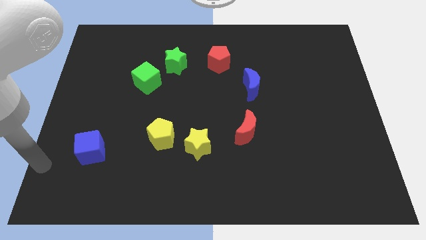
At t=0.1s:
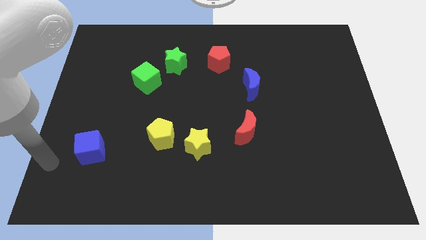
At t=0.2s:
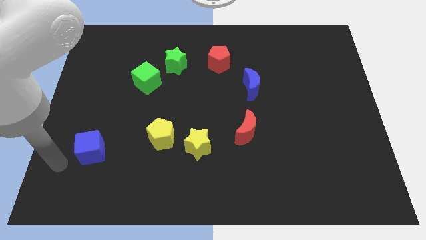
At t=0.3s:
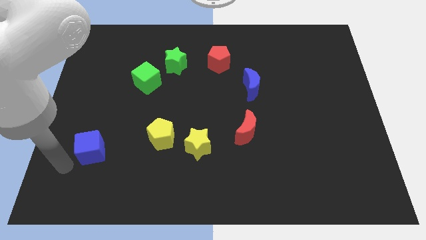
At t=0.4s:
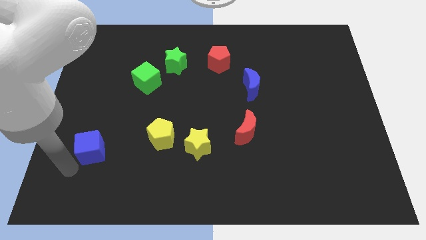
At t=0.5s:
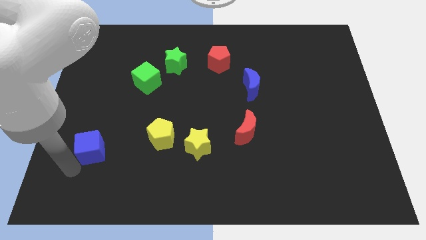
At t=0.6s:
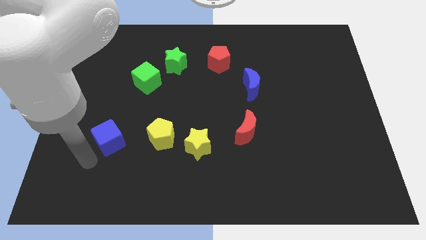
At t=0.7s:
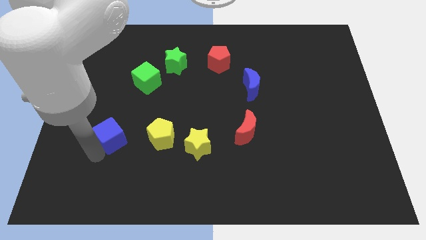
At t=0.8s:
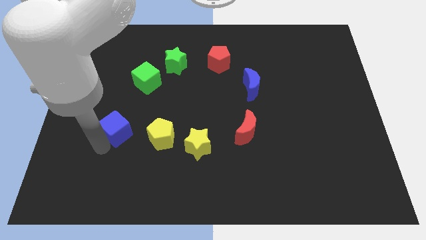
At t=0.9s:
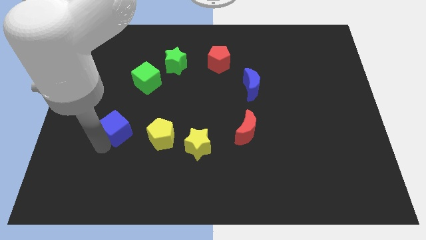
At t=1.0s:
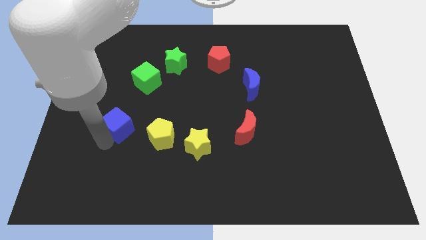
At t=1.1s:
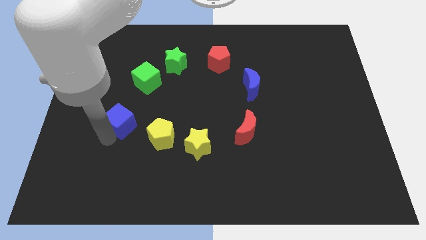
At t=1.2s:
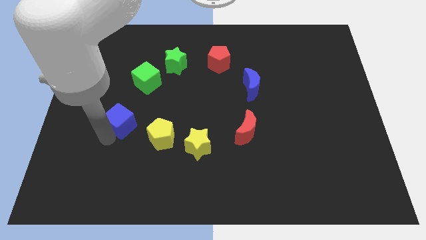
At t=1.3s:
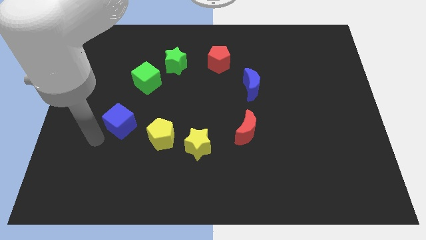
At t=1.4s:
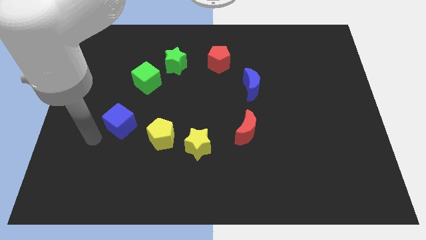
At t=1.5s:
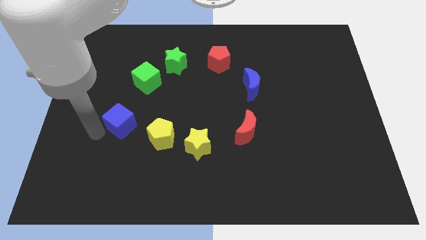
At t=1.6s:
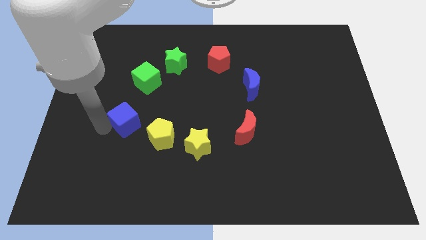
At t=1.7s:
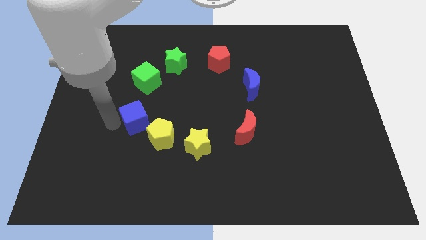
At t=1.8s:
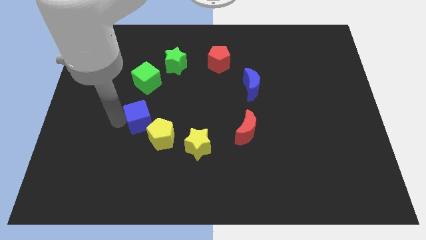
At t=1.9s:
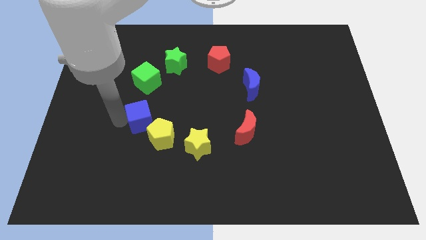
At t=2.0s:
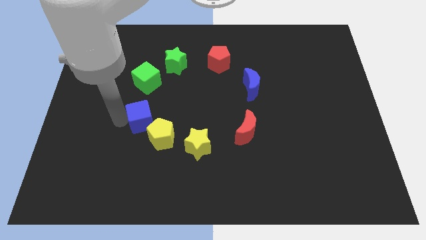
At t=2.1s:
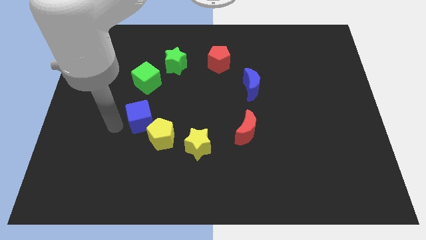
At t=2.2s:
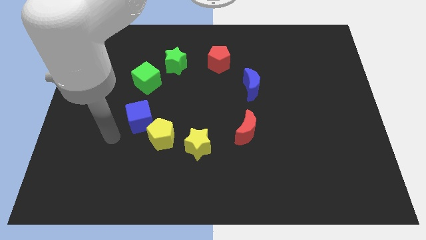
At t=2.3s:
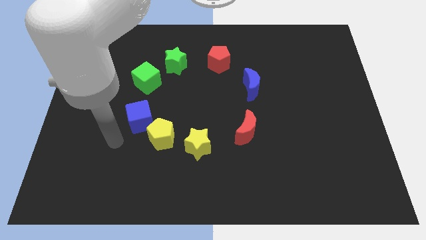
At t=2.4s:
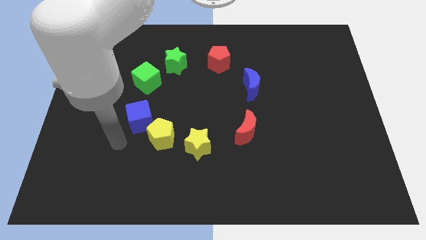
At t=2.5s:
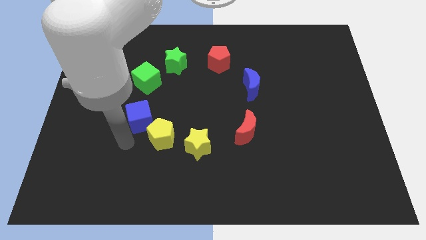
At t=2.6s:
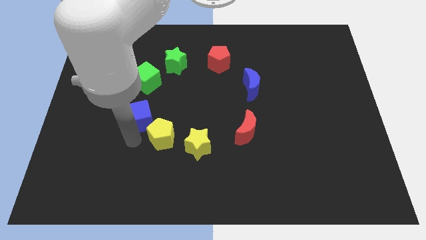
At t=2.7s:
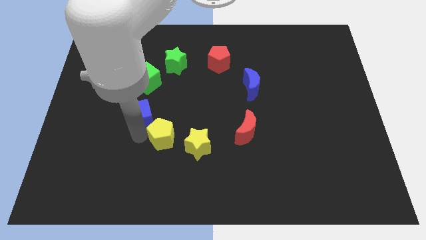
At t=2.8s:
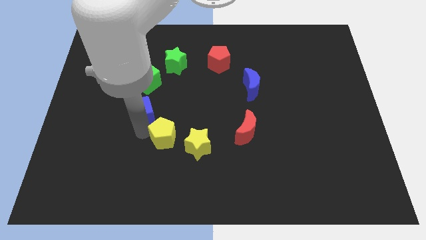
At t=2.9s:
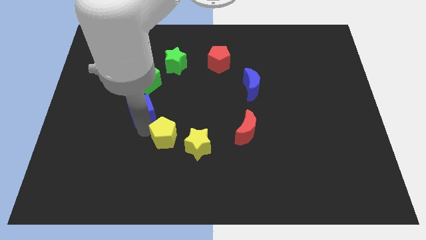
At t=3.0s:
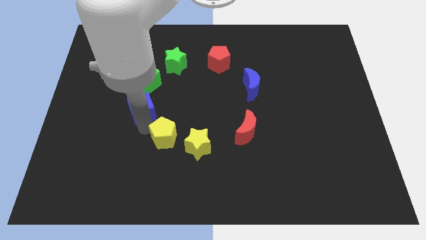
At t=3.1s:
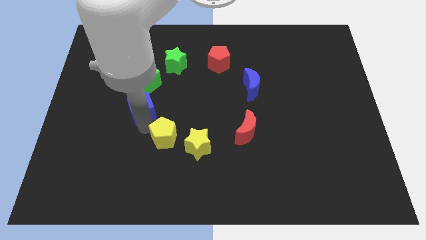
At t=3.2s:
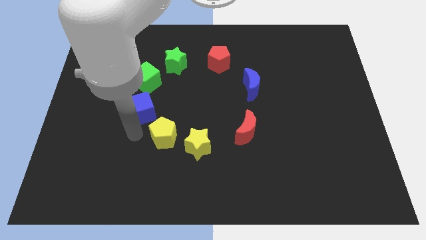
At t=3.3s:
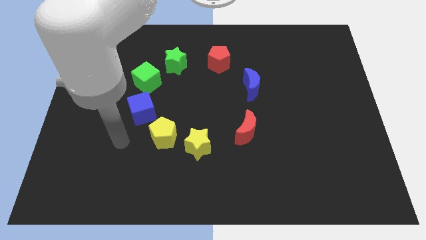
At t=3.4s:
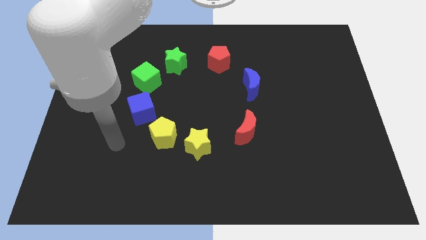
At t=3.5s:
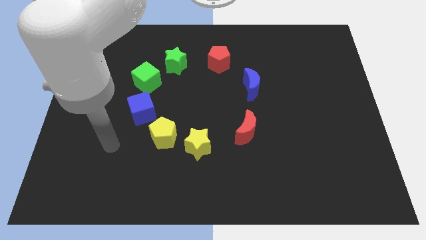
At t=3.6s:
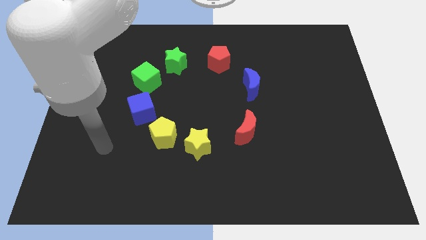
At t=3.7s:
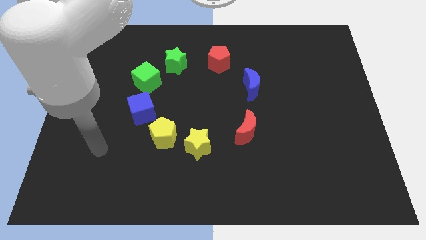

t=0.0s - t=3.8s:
move blue cube diagonally above yellow pentagon

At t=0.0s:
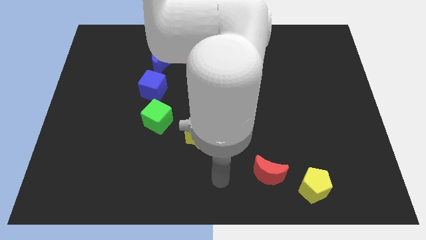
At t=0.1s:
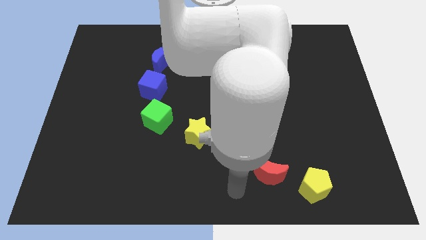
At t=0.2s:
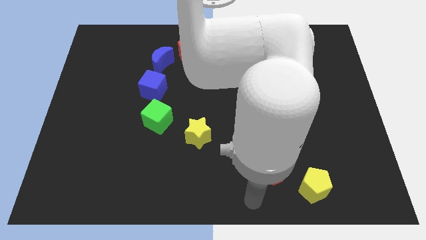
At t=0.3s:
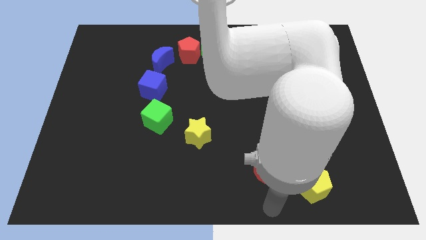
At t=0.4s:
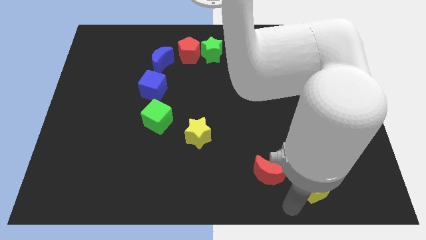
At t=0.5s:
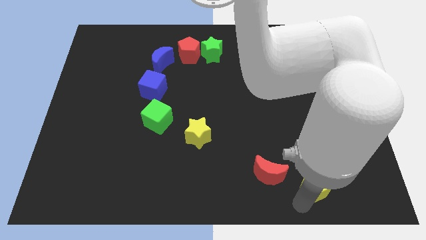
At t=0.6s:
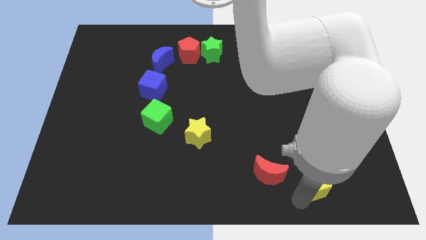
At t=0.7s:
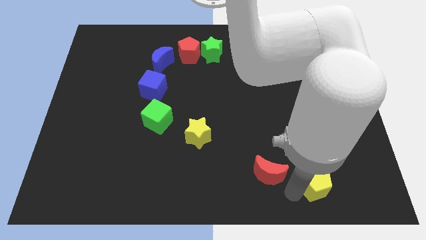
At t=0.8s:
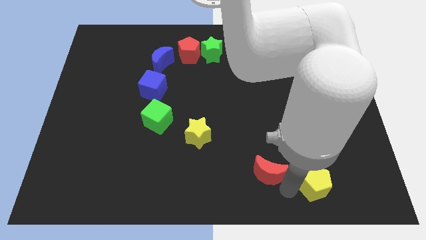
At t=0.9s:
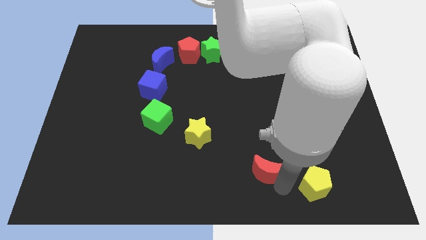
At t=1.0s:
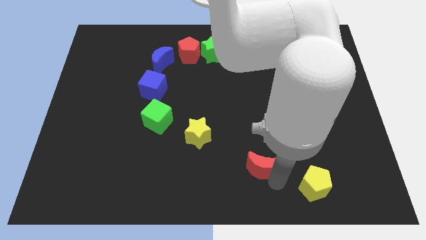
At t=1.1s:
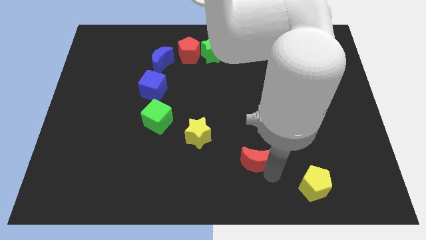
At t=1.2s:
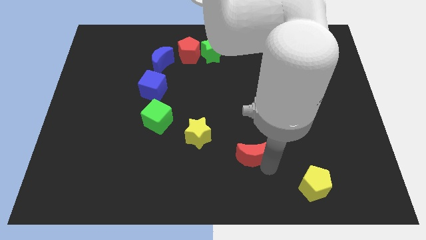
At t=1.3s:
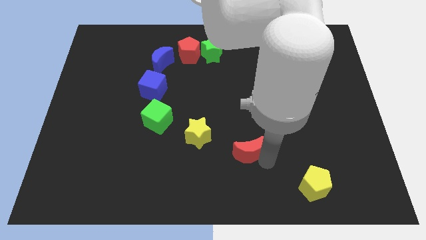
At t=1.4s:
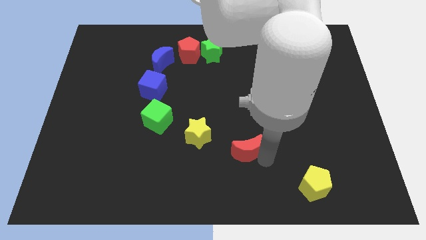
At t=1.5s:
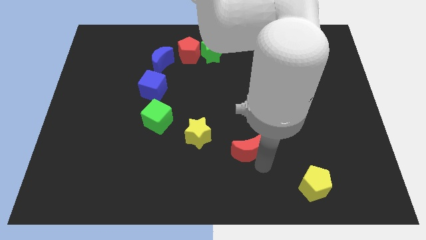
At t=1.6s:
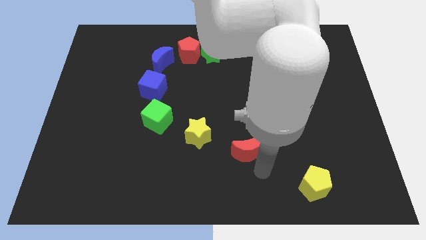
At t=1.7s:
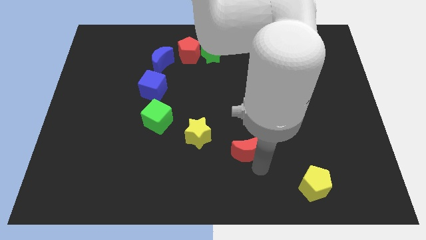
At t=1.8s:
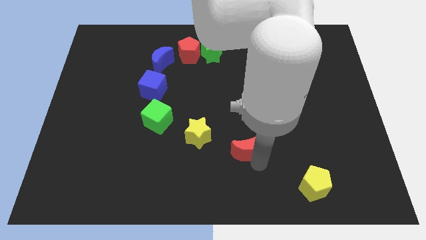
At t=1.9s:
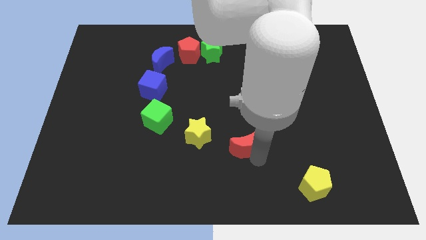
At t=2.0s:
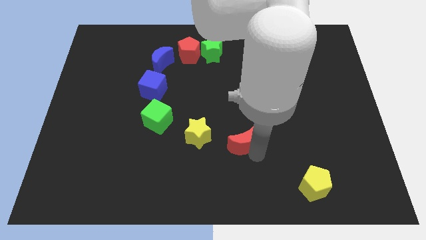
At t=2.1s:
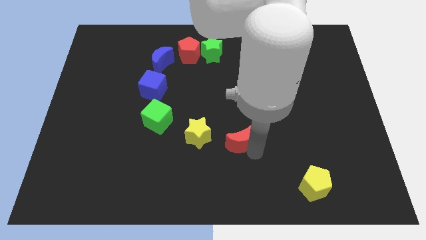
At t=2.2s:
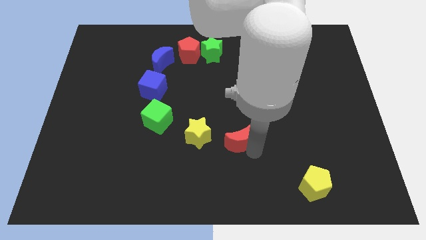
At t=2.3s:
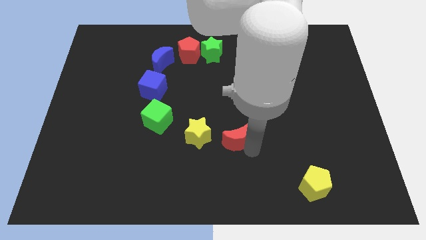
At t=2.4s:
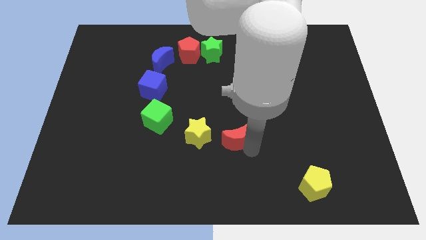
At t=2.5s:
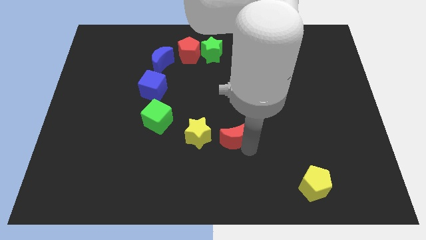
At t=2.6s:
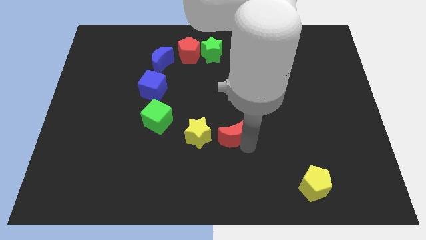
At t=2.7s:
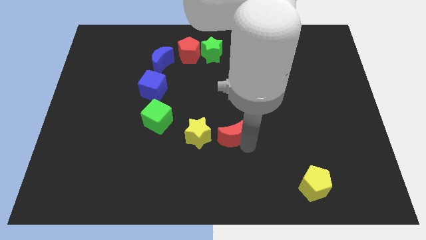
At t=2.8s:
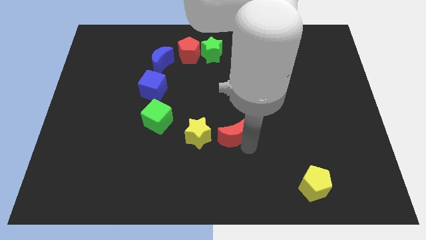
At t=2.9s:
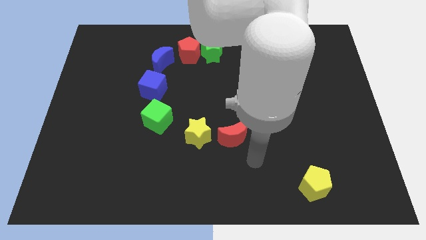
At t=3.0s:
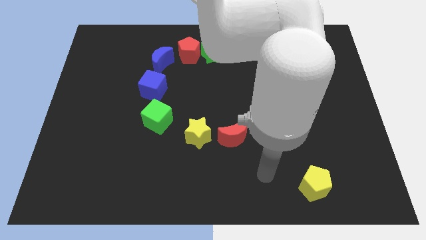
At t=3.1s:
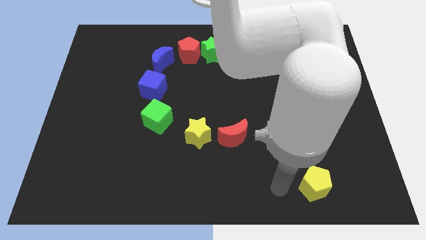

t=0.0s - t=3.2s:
push the red moon at the top right side of the yellow star

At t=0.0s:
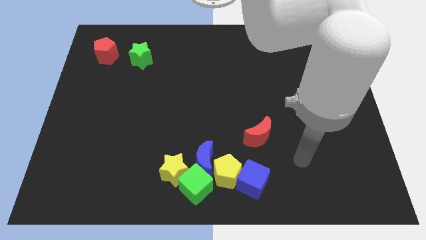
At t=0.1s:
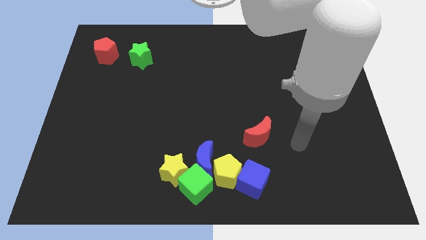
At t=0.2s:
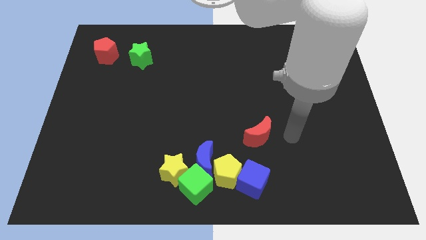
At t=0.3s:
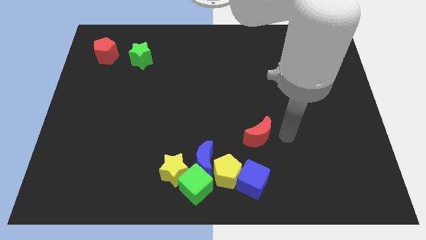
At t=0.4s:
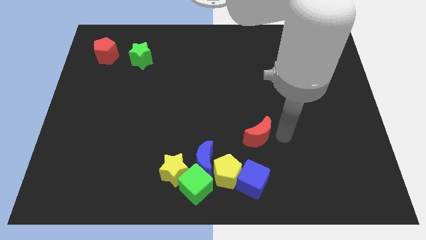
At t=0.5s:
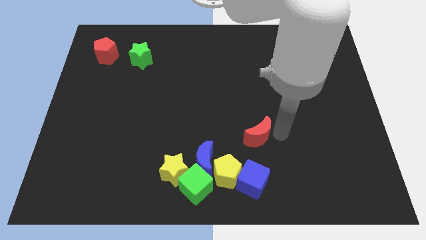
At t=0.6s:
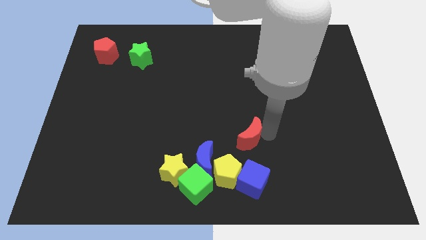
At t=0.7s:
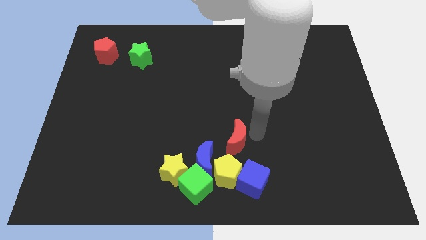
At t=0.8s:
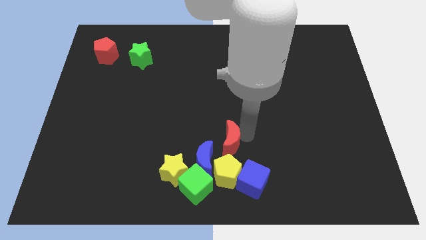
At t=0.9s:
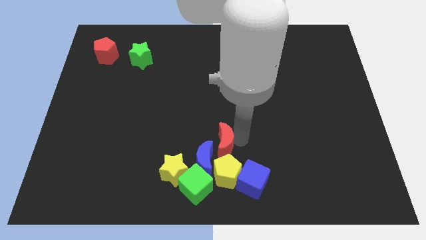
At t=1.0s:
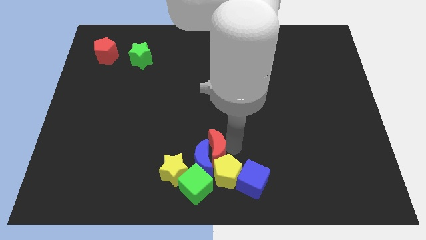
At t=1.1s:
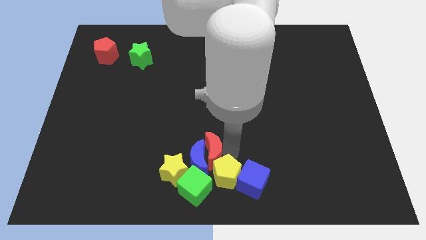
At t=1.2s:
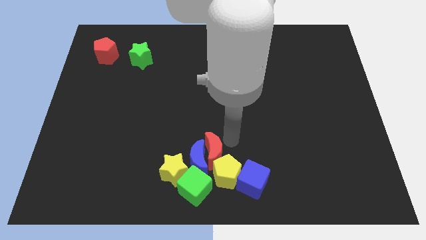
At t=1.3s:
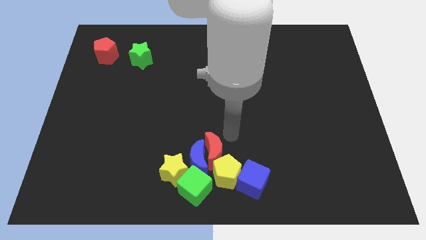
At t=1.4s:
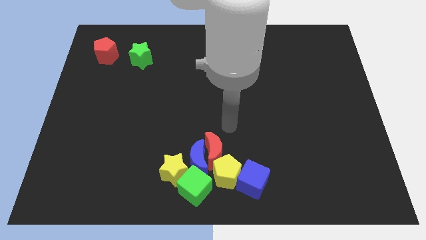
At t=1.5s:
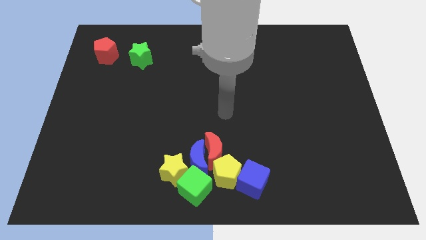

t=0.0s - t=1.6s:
push red moon into blue moon
